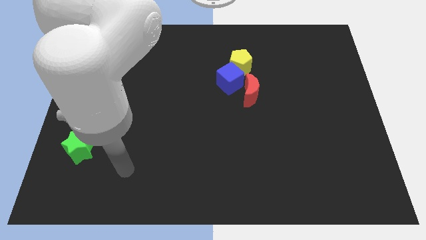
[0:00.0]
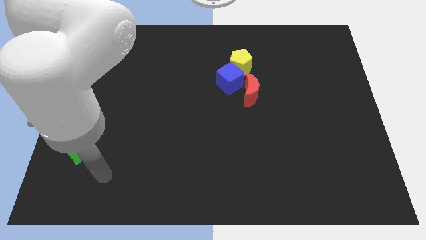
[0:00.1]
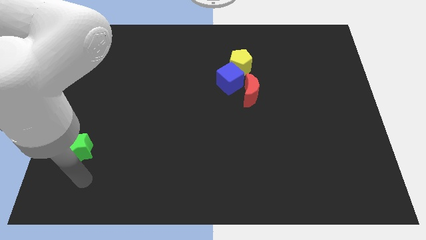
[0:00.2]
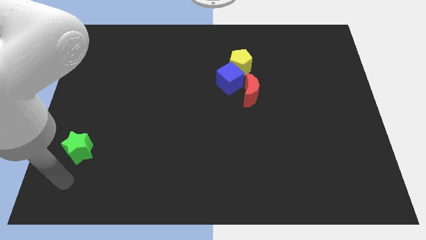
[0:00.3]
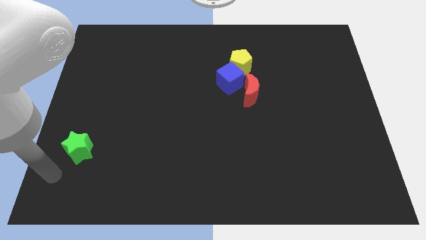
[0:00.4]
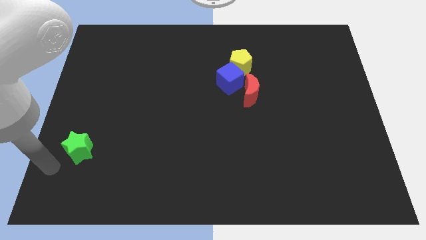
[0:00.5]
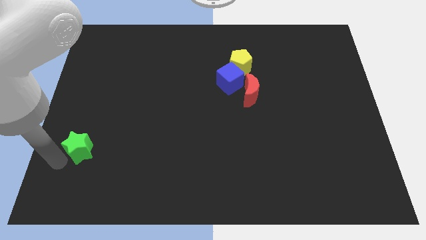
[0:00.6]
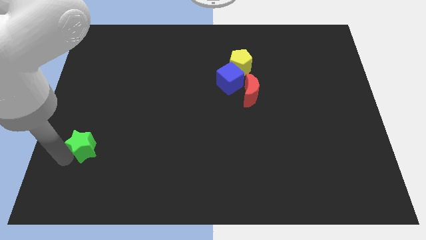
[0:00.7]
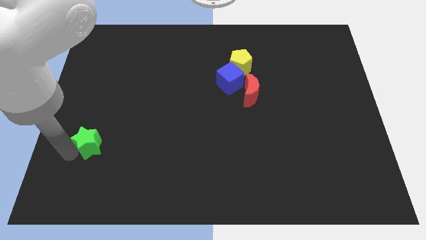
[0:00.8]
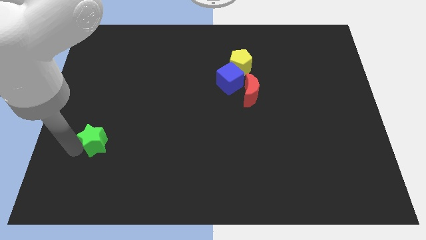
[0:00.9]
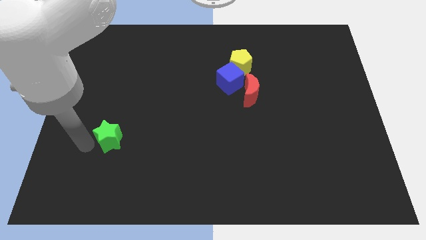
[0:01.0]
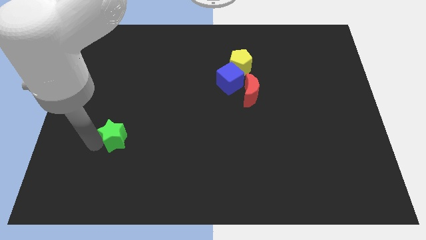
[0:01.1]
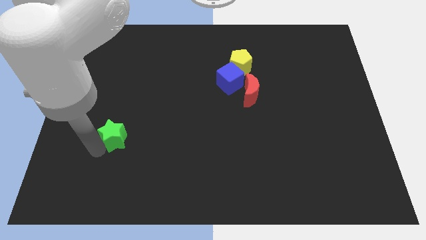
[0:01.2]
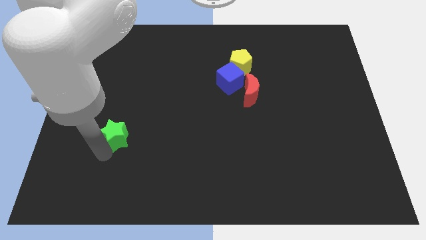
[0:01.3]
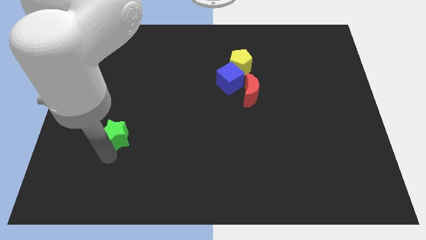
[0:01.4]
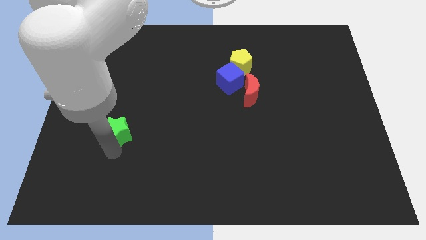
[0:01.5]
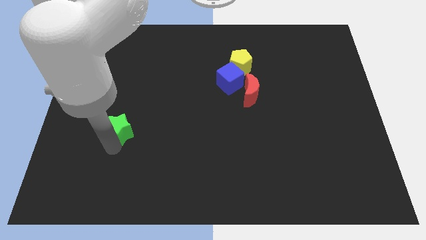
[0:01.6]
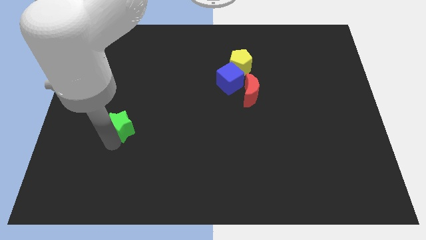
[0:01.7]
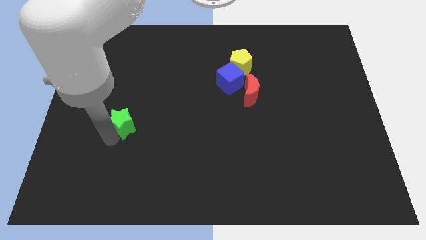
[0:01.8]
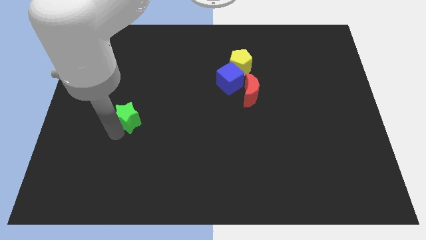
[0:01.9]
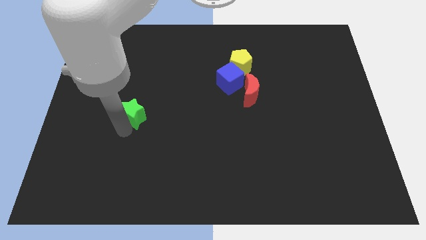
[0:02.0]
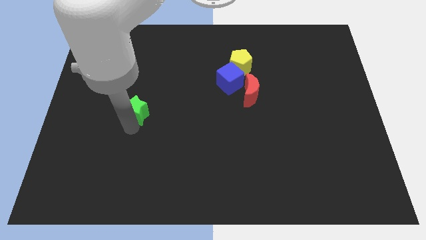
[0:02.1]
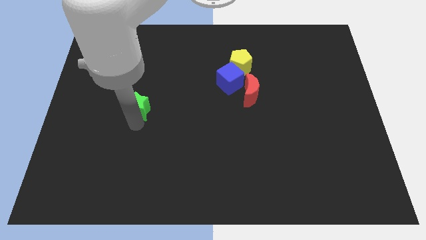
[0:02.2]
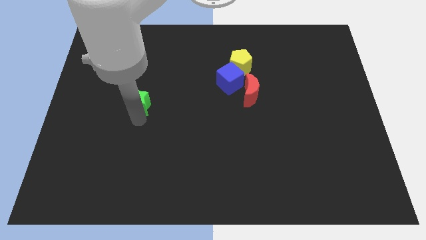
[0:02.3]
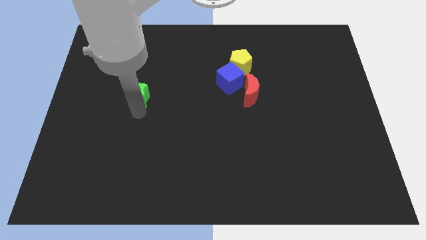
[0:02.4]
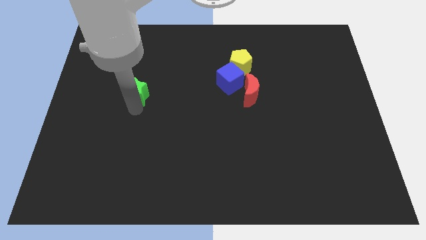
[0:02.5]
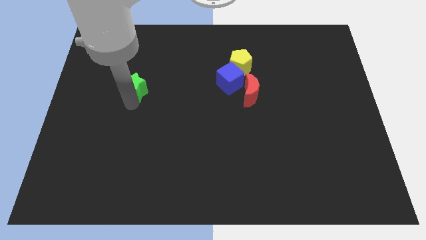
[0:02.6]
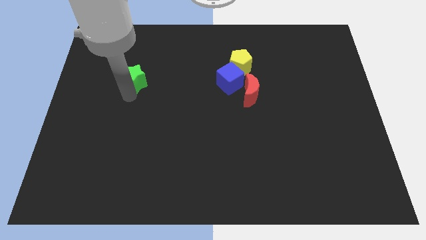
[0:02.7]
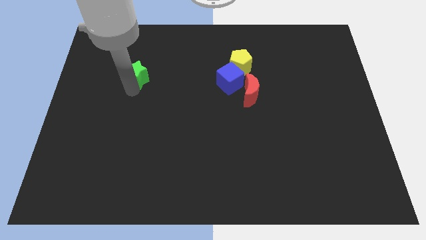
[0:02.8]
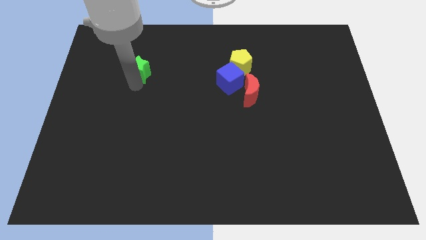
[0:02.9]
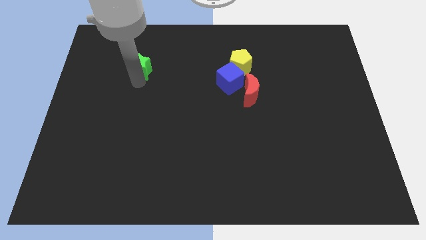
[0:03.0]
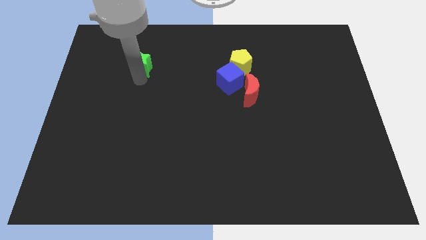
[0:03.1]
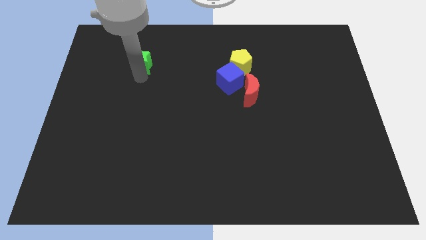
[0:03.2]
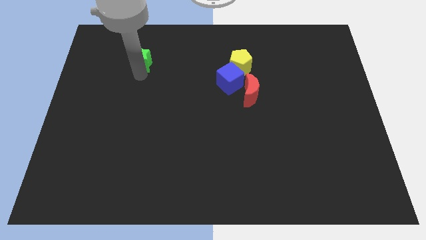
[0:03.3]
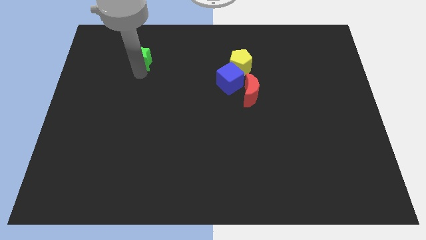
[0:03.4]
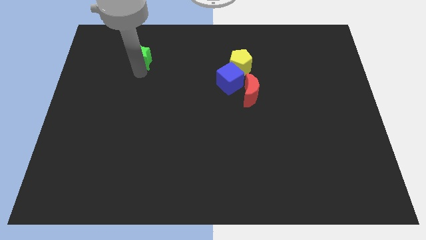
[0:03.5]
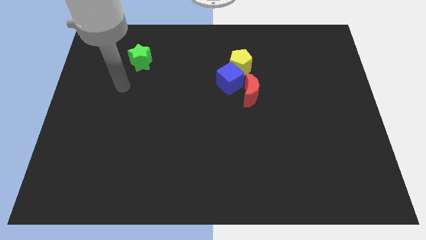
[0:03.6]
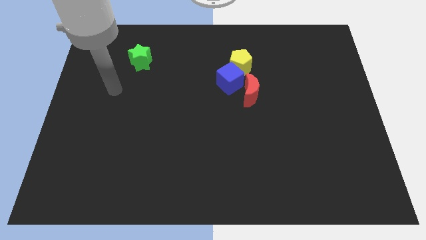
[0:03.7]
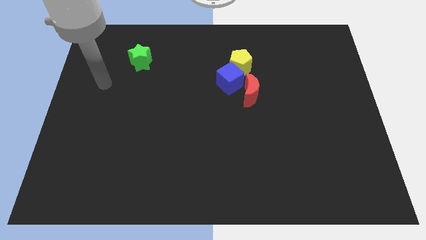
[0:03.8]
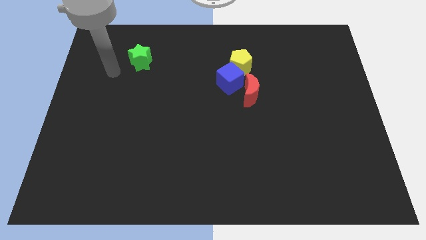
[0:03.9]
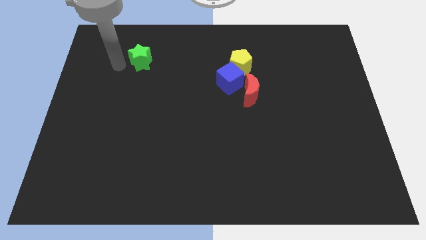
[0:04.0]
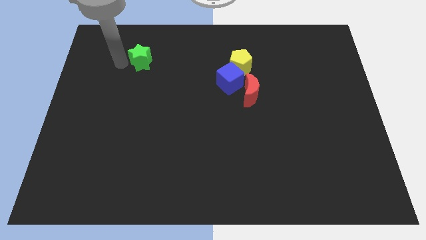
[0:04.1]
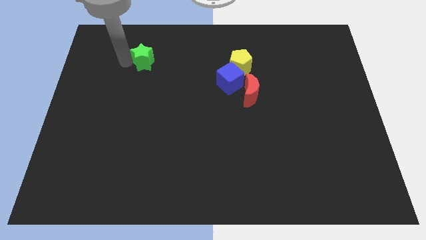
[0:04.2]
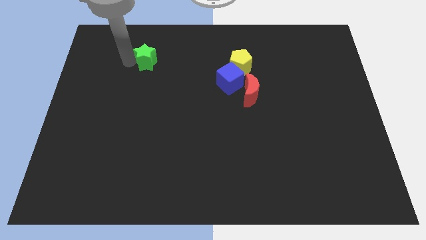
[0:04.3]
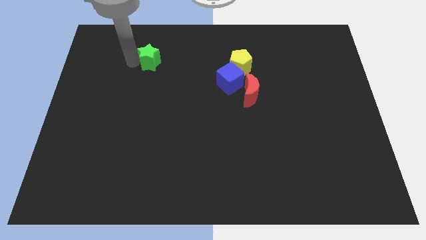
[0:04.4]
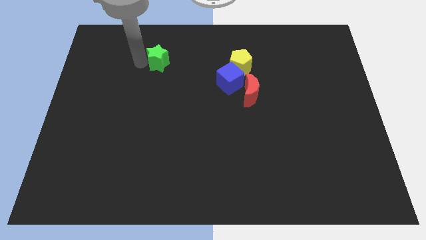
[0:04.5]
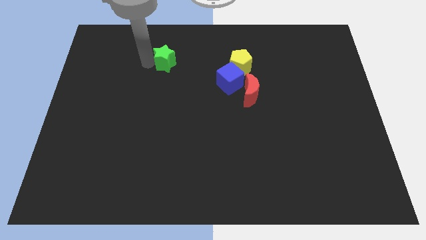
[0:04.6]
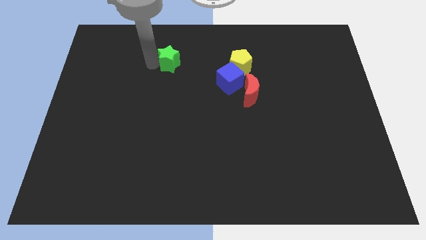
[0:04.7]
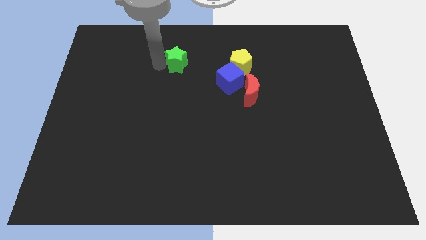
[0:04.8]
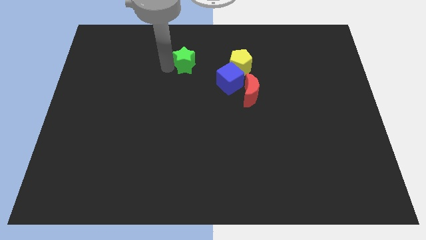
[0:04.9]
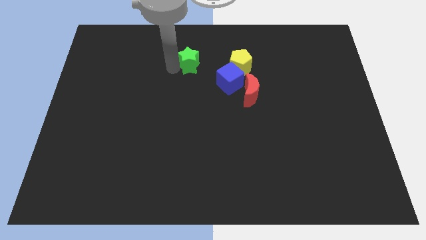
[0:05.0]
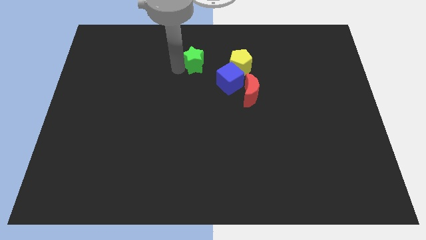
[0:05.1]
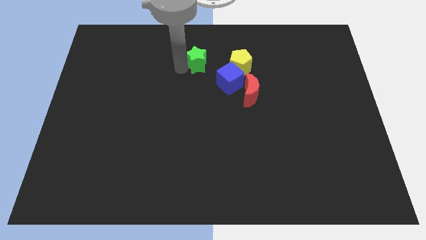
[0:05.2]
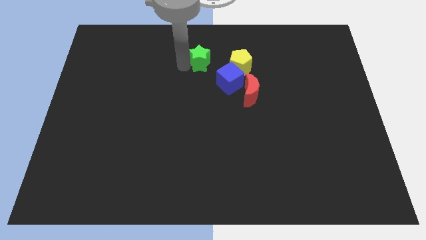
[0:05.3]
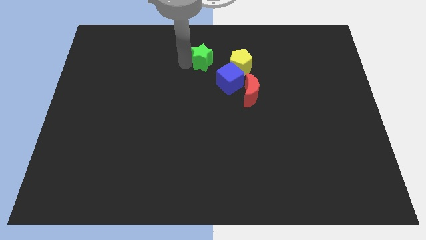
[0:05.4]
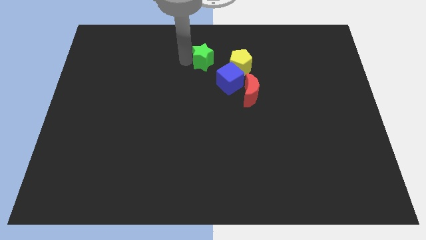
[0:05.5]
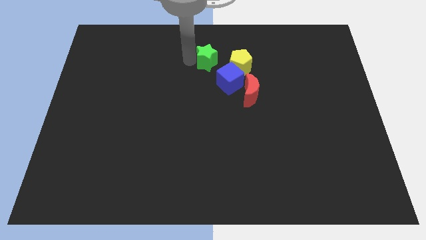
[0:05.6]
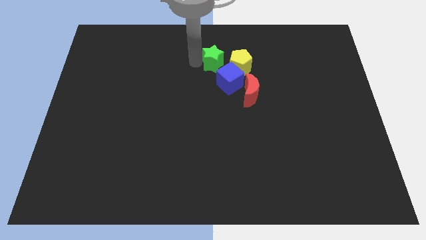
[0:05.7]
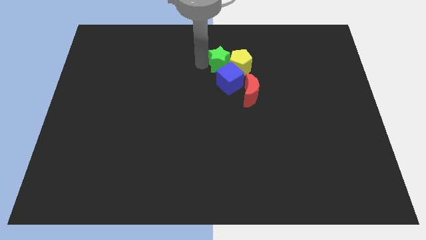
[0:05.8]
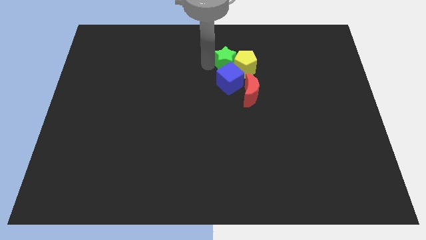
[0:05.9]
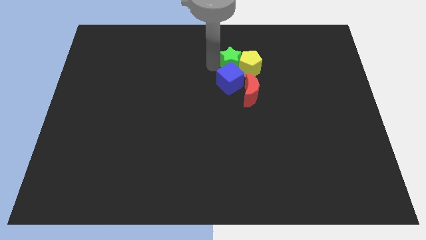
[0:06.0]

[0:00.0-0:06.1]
put the green star to the yellow pentagon

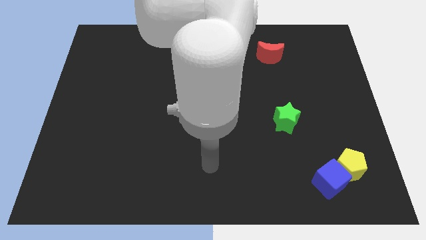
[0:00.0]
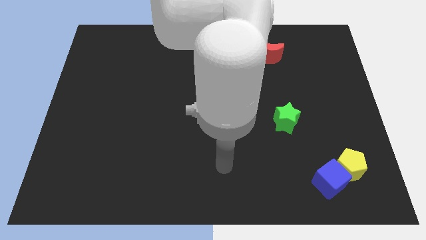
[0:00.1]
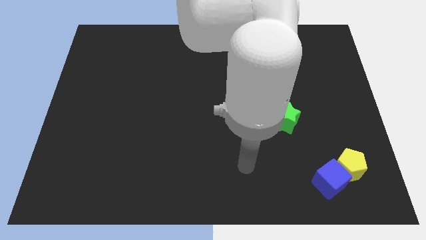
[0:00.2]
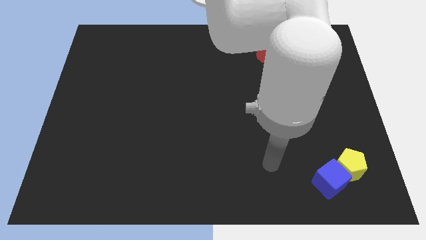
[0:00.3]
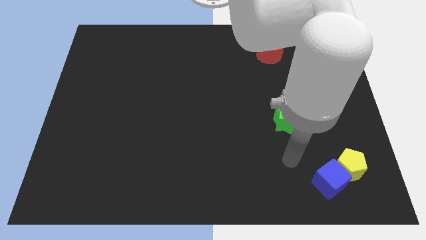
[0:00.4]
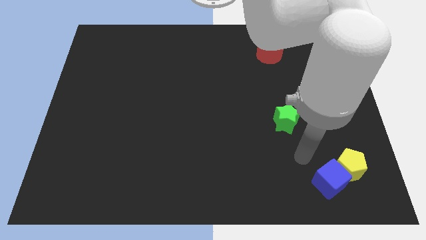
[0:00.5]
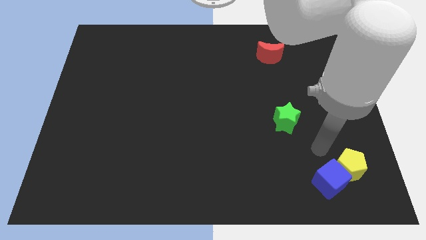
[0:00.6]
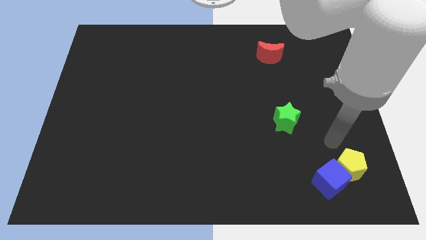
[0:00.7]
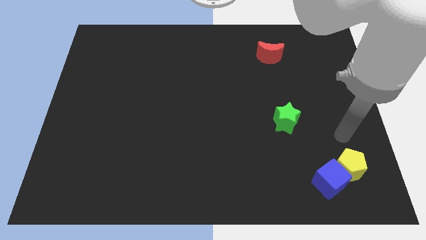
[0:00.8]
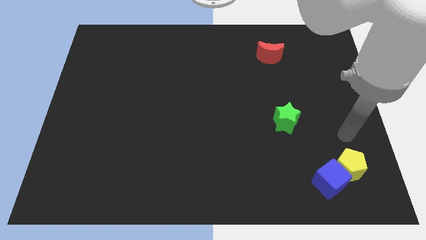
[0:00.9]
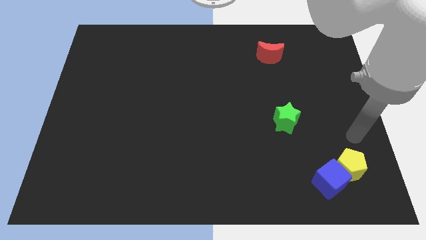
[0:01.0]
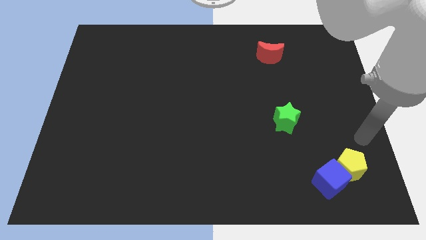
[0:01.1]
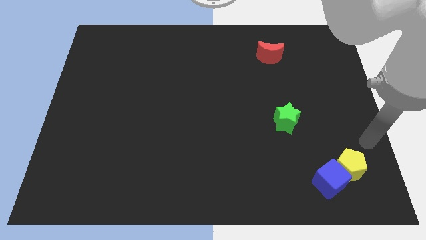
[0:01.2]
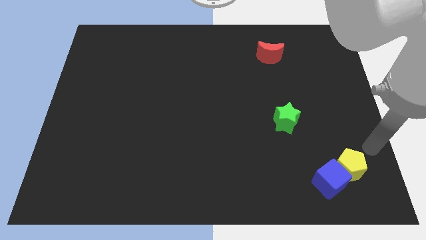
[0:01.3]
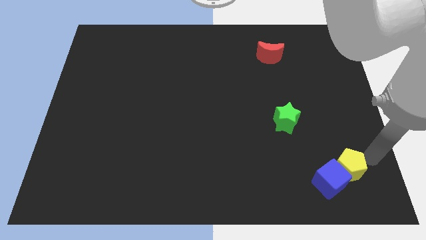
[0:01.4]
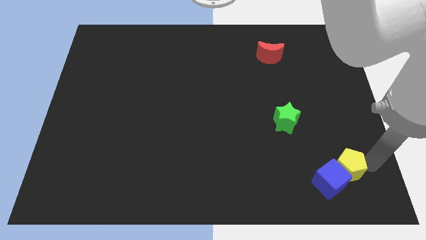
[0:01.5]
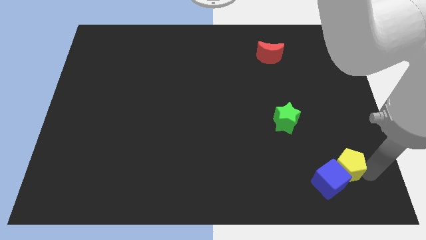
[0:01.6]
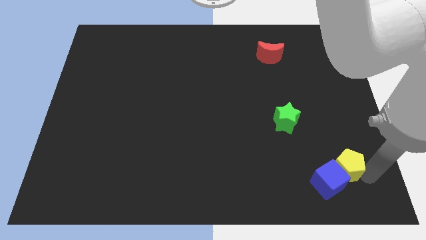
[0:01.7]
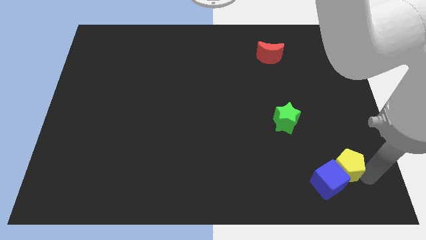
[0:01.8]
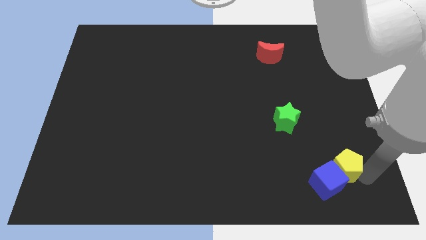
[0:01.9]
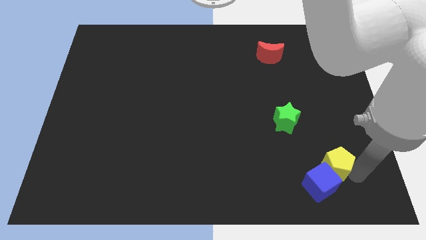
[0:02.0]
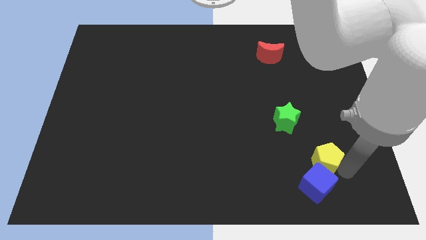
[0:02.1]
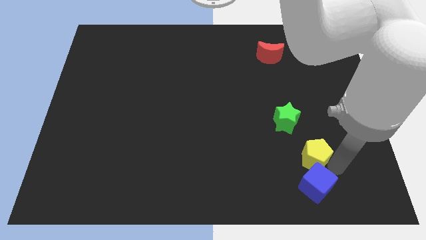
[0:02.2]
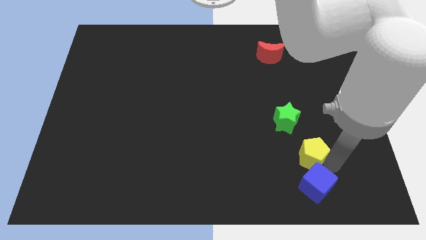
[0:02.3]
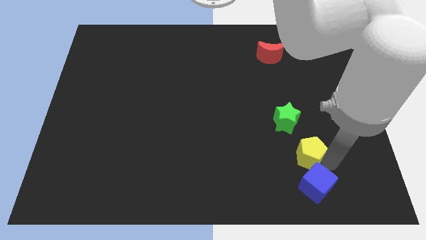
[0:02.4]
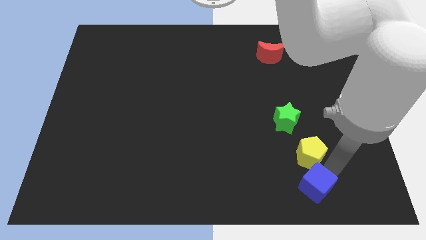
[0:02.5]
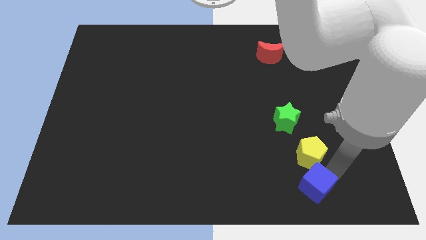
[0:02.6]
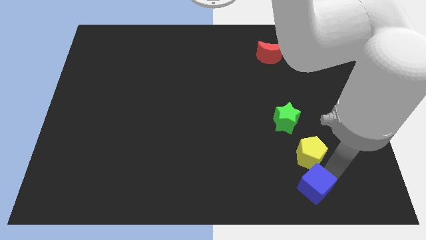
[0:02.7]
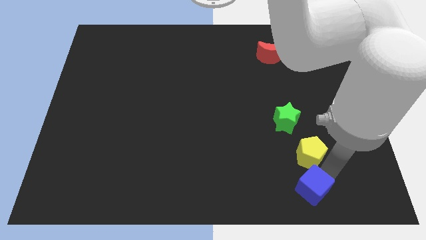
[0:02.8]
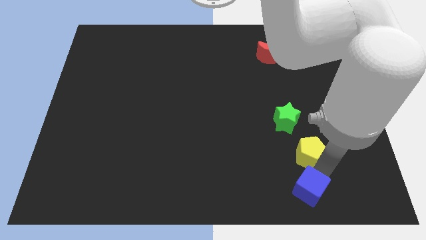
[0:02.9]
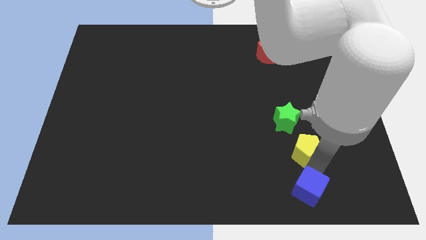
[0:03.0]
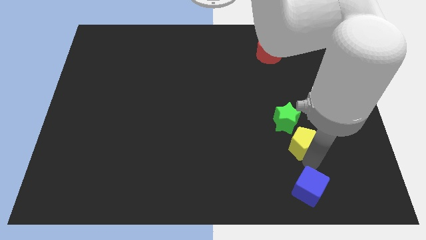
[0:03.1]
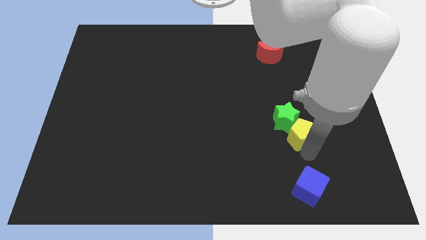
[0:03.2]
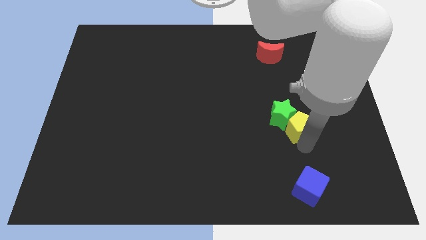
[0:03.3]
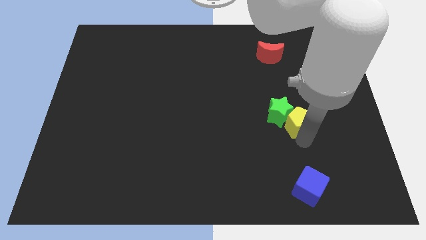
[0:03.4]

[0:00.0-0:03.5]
put the yellow block close to the star
